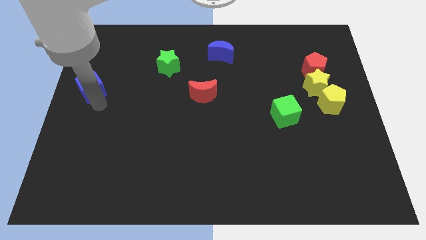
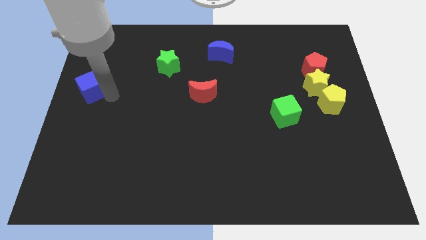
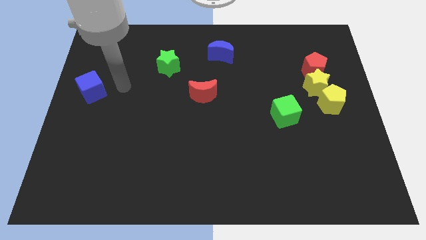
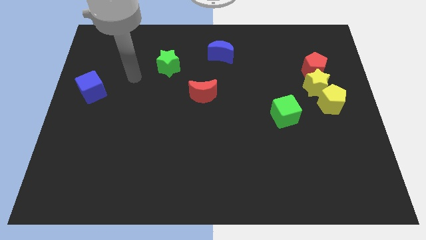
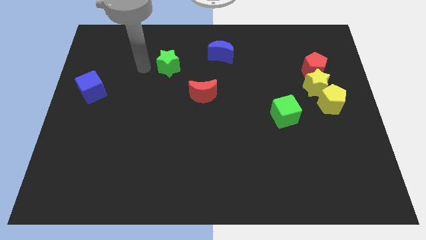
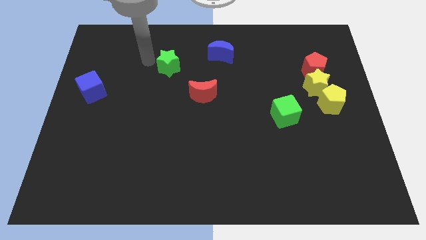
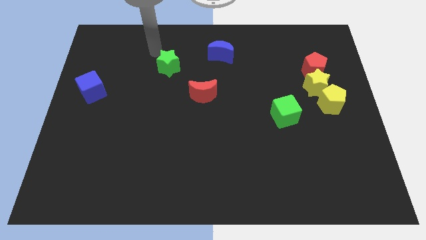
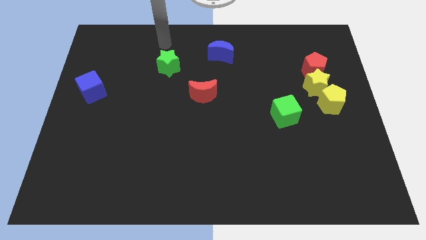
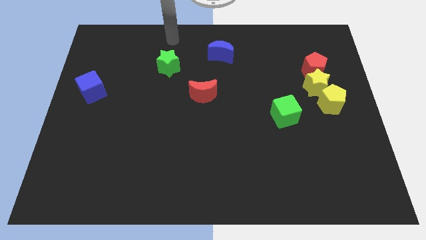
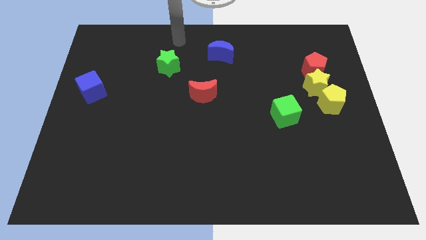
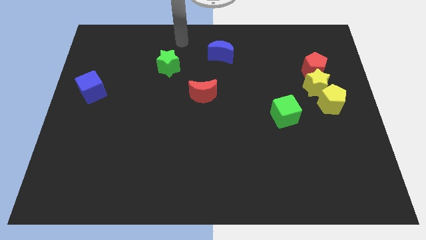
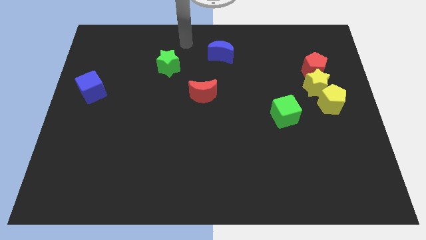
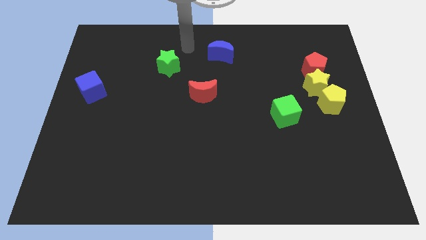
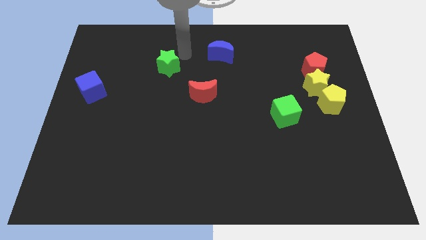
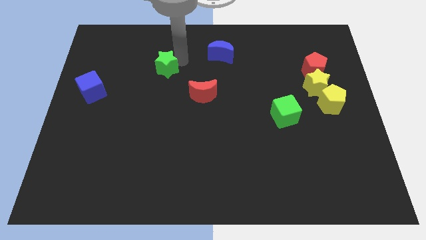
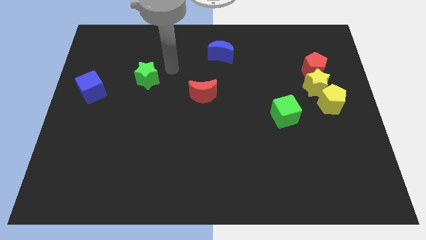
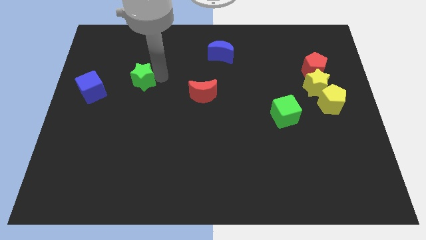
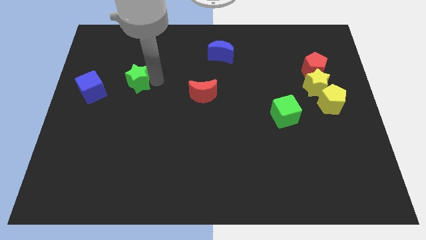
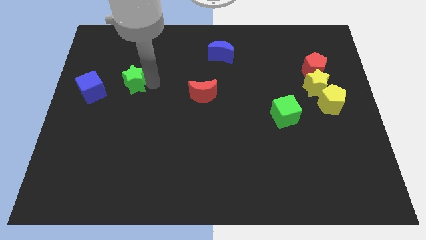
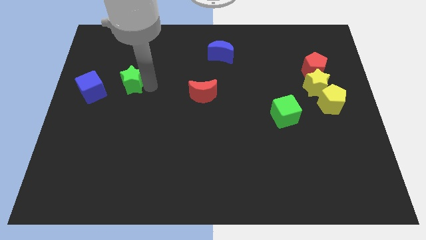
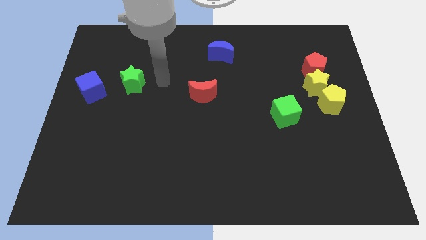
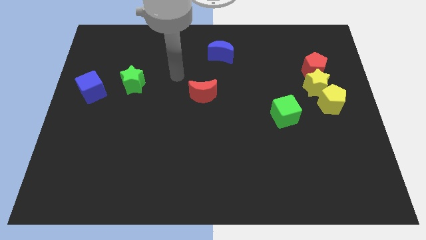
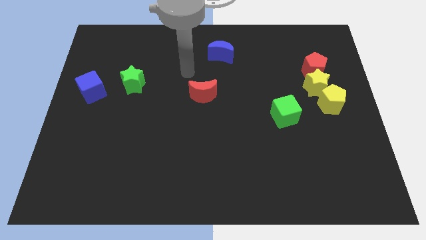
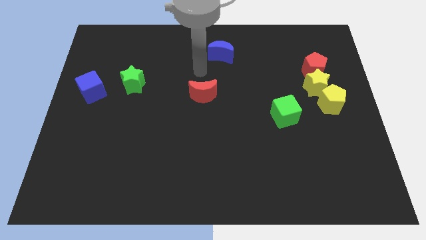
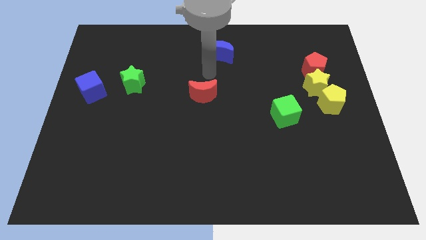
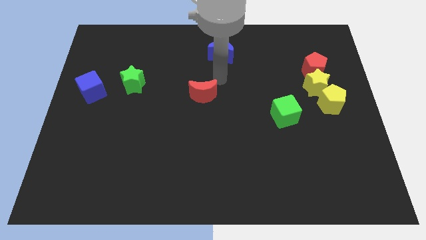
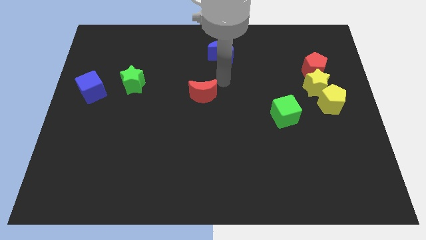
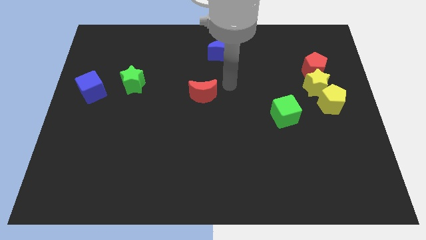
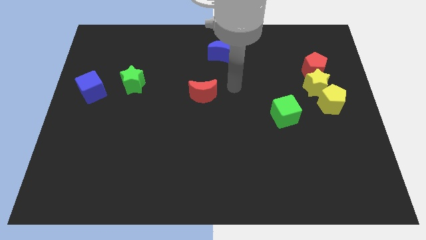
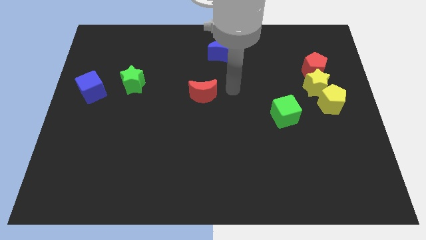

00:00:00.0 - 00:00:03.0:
place the star in between the red moon and blue cube

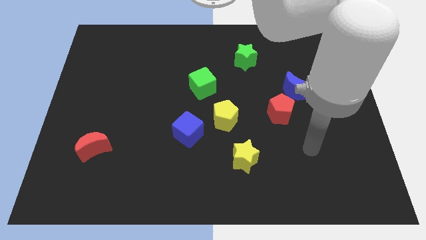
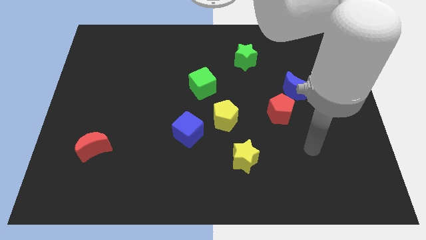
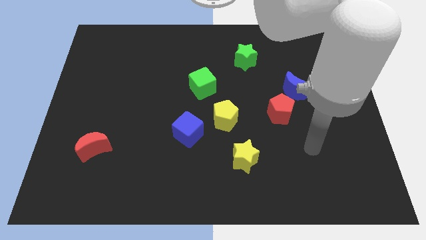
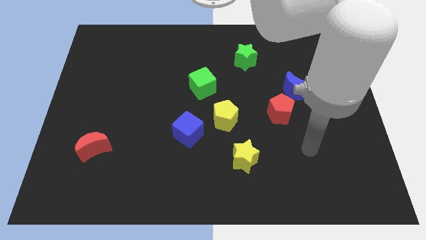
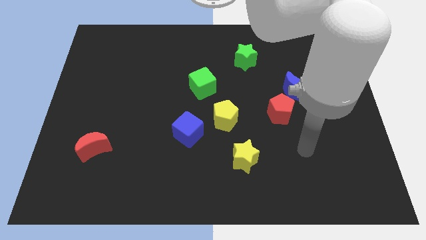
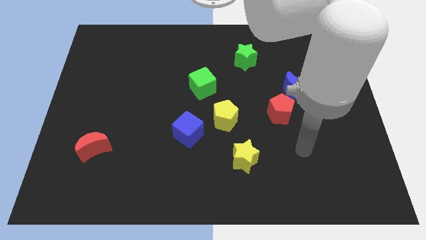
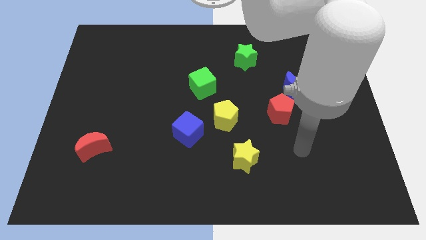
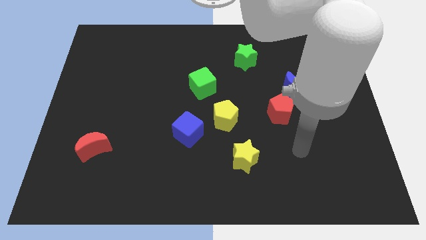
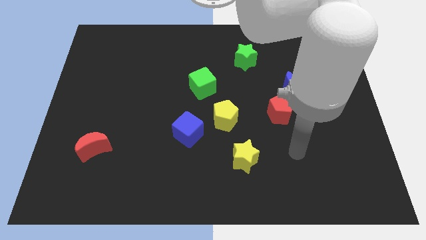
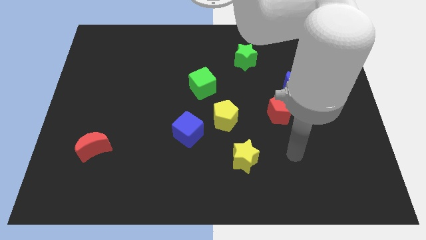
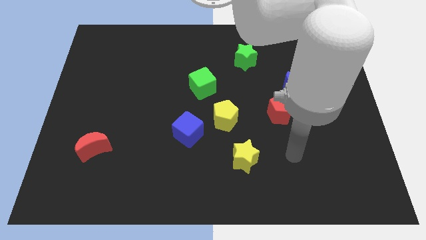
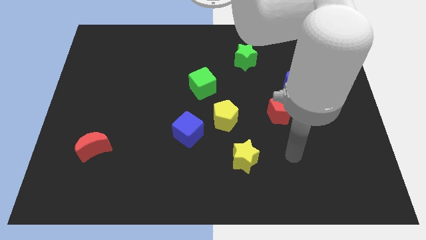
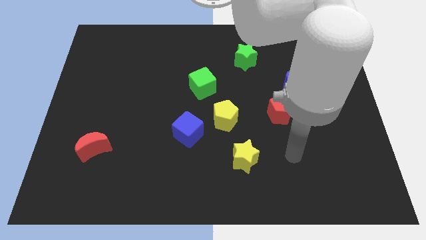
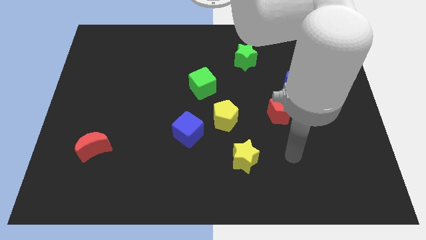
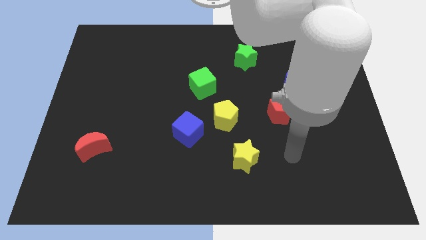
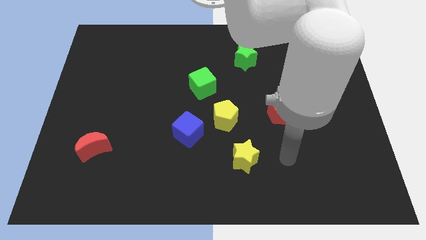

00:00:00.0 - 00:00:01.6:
point your hand at the right side of the yellow star

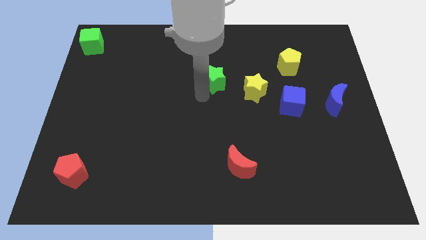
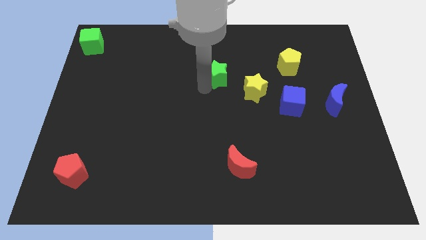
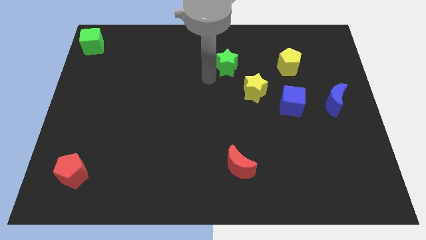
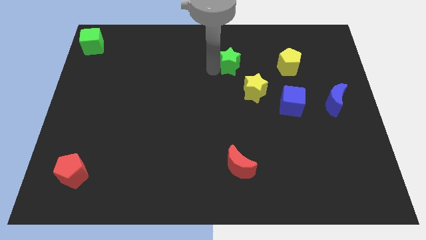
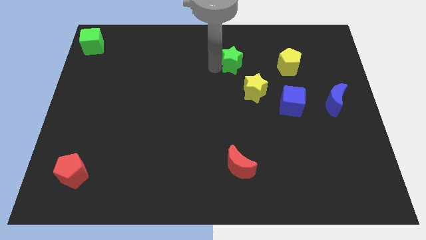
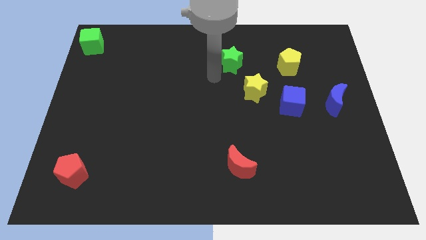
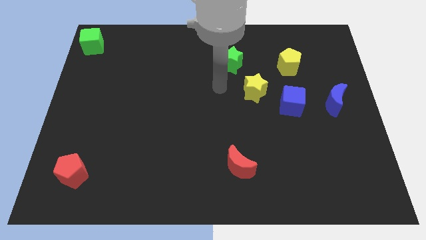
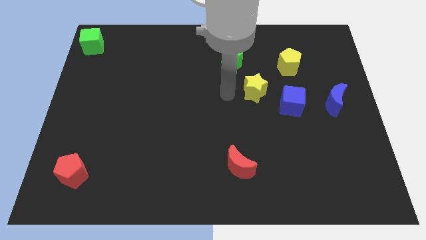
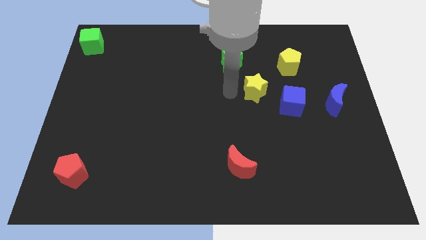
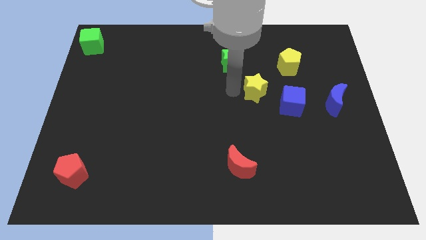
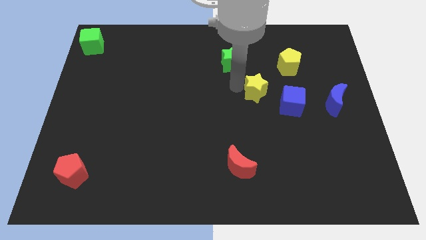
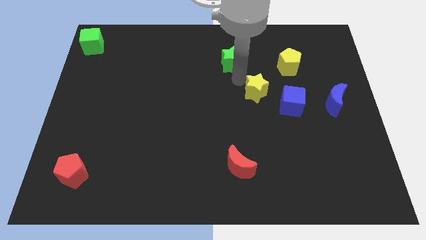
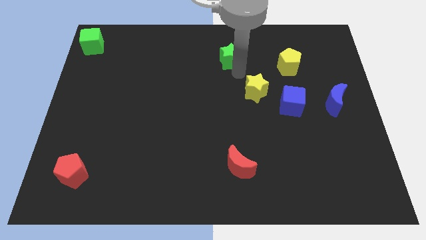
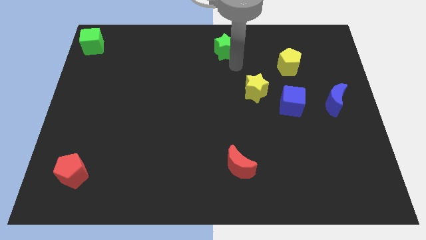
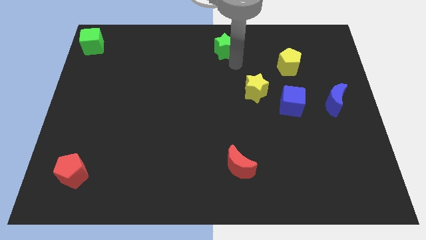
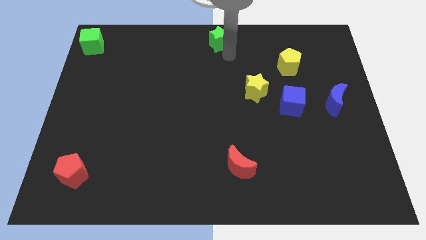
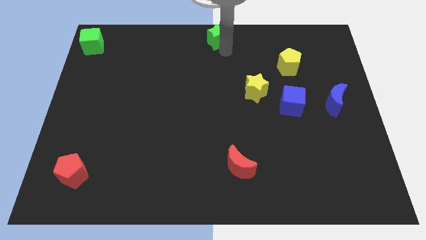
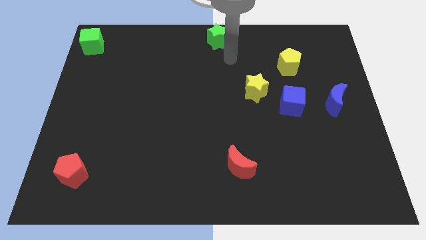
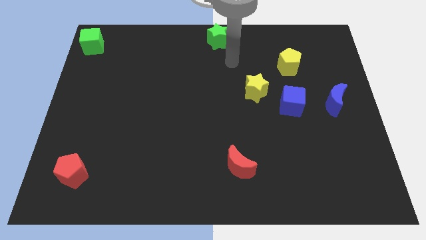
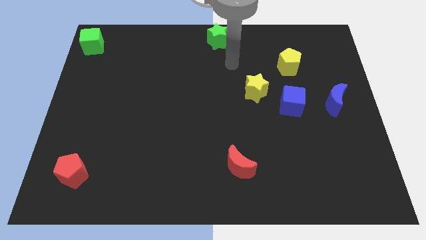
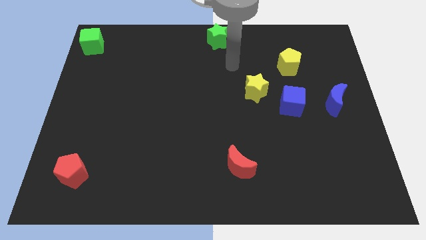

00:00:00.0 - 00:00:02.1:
move green star to the top center

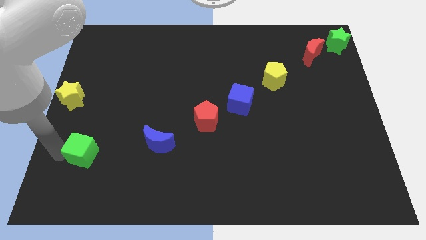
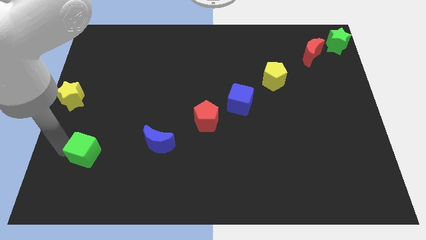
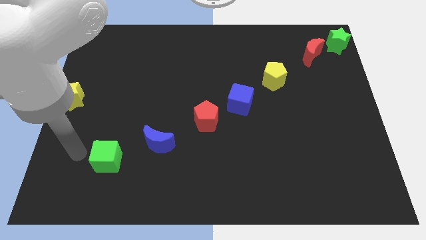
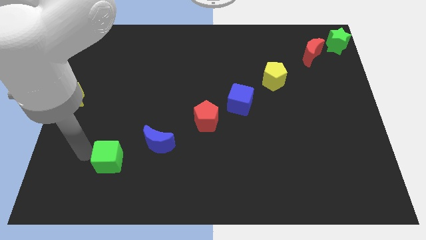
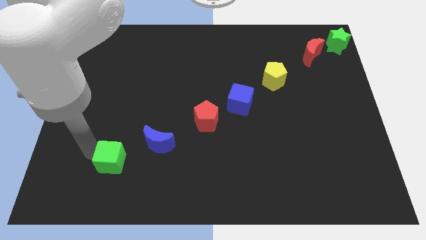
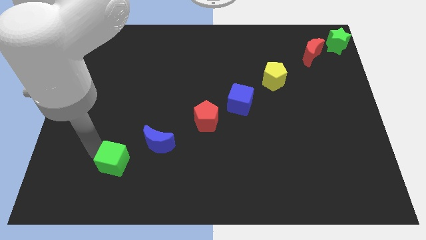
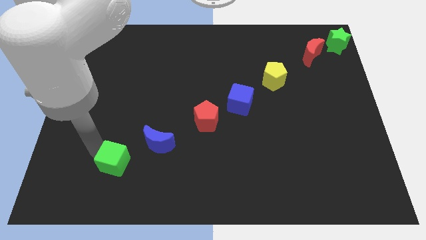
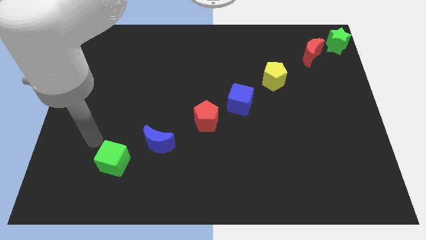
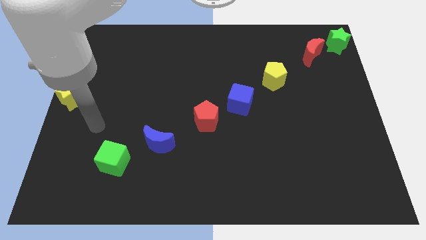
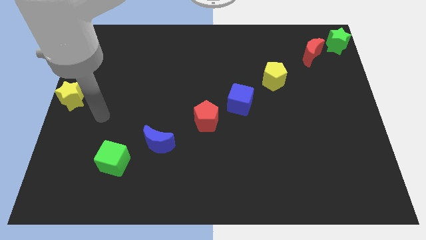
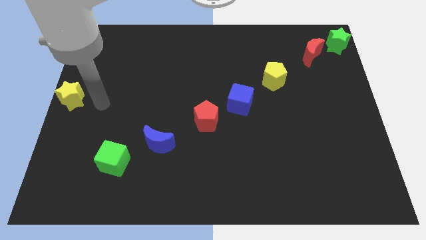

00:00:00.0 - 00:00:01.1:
place the green cube at the bottom left side of blue crescent

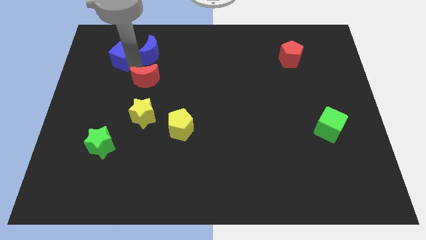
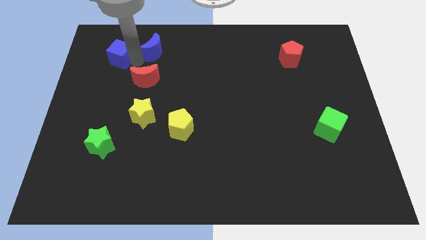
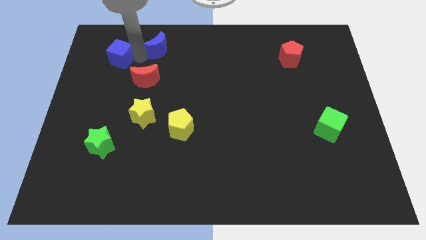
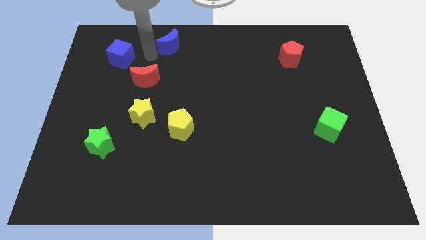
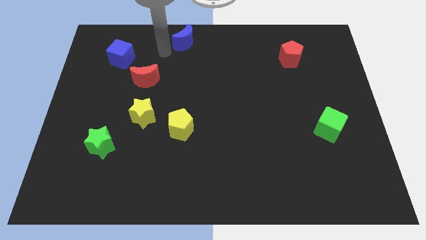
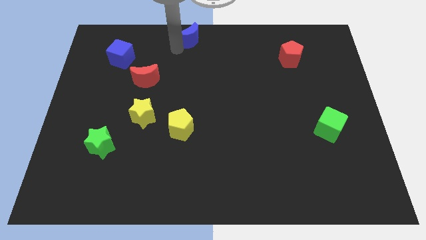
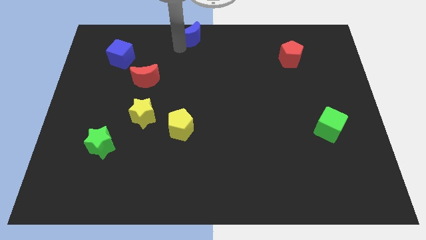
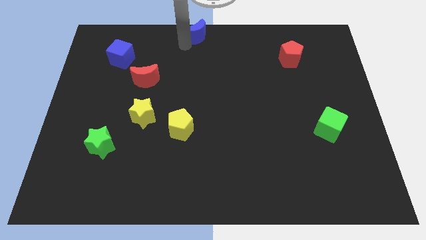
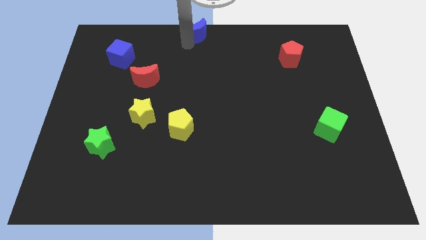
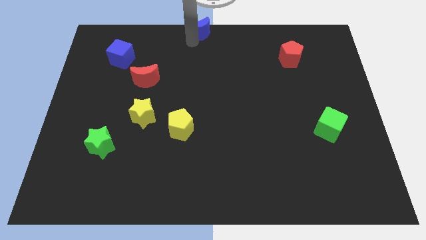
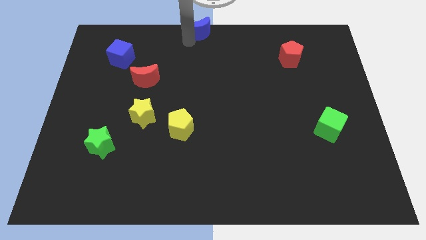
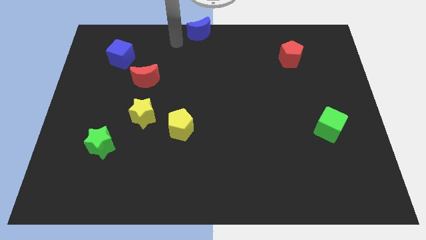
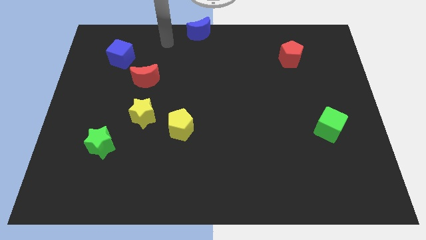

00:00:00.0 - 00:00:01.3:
place blue moon to the top center of the board
